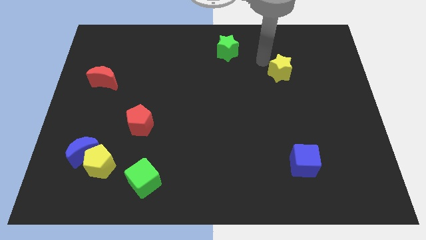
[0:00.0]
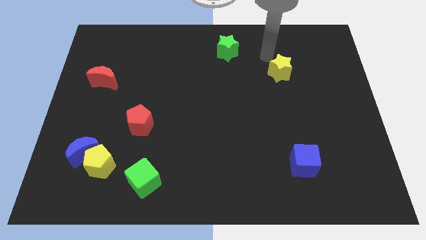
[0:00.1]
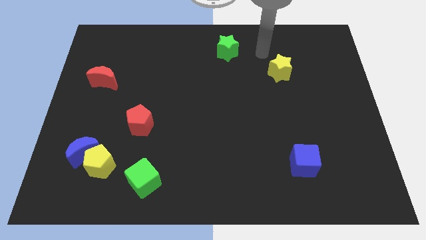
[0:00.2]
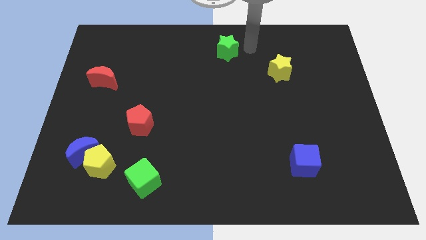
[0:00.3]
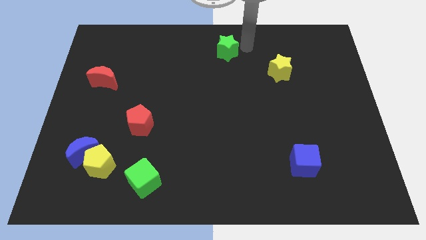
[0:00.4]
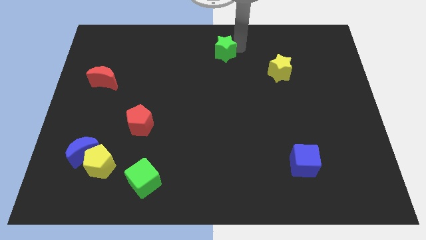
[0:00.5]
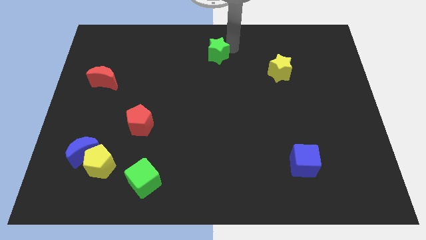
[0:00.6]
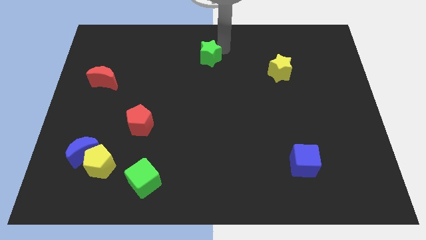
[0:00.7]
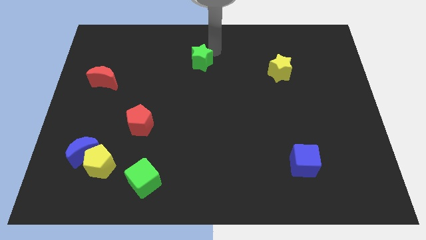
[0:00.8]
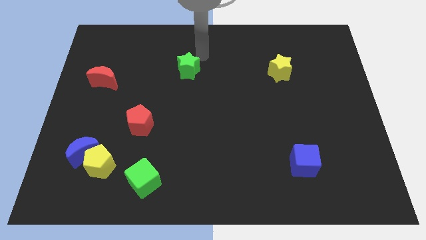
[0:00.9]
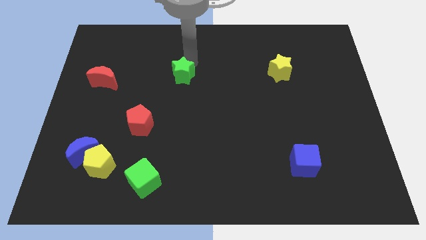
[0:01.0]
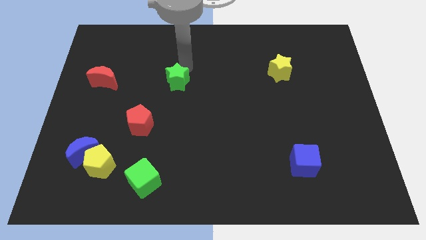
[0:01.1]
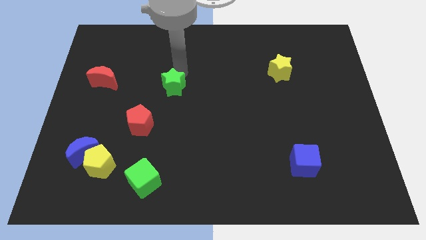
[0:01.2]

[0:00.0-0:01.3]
place green star to the right of red moon

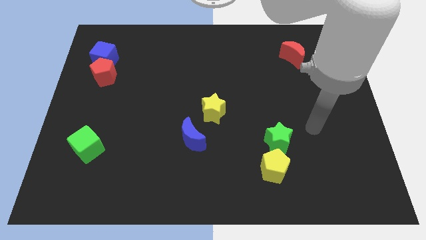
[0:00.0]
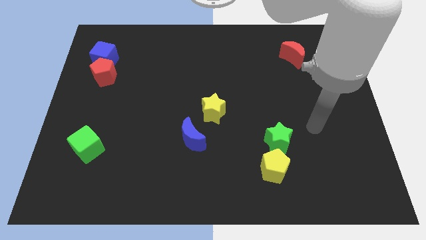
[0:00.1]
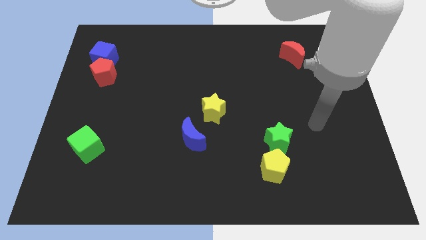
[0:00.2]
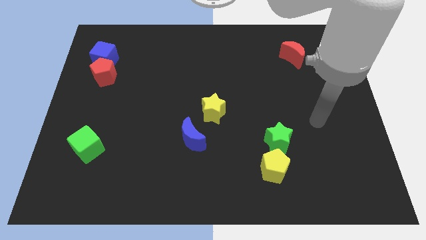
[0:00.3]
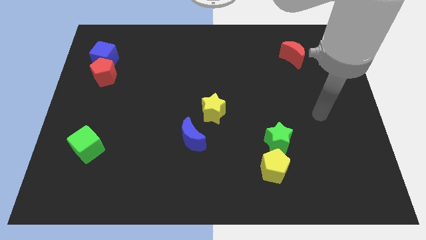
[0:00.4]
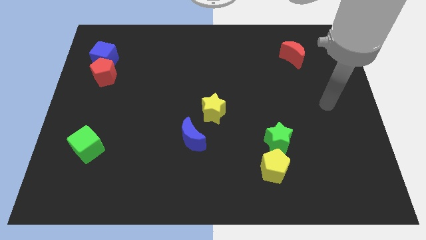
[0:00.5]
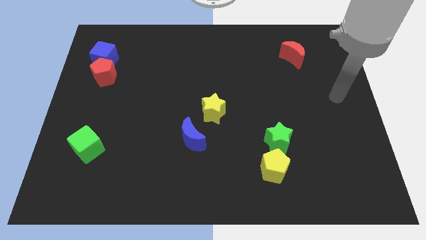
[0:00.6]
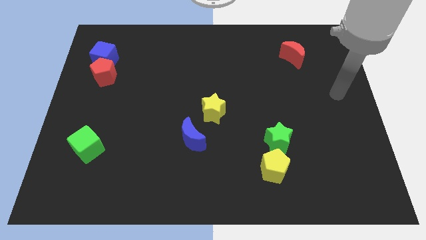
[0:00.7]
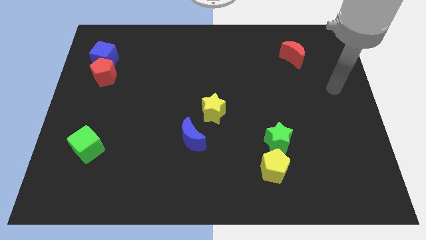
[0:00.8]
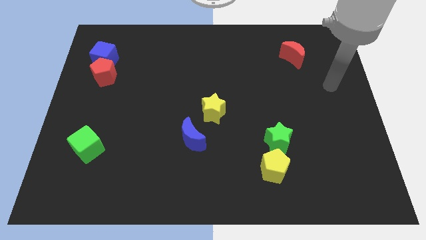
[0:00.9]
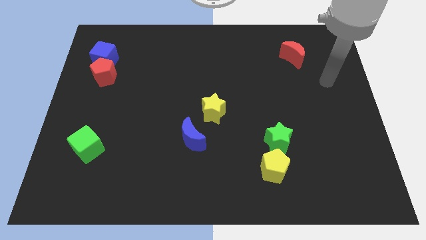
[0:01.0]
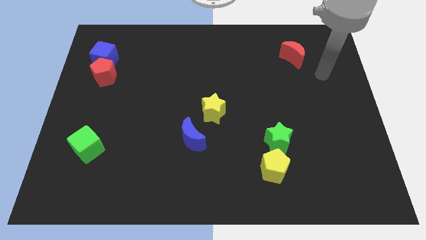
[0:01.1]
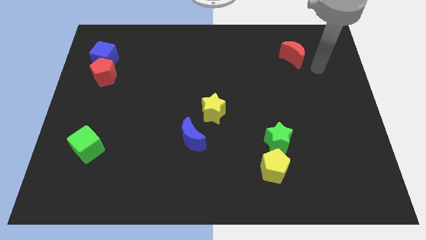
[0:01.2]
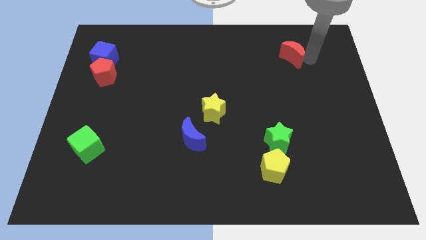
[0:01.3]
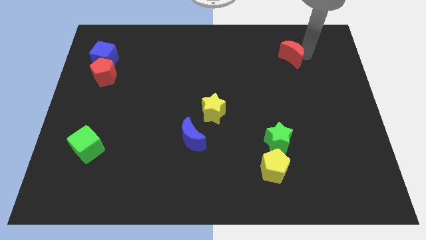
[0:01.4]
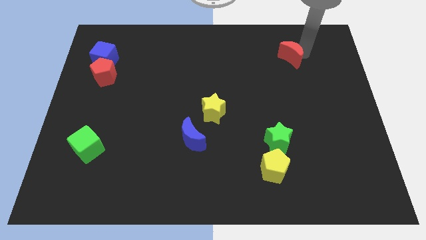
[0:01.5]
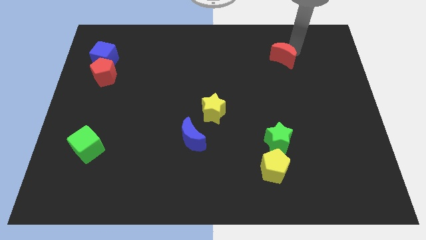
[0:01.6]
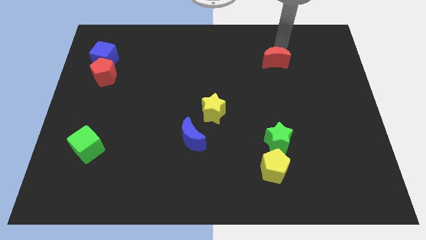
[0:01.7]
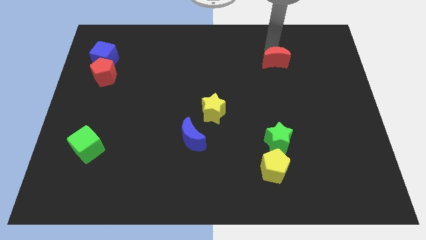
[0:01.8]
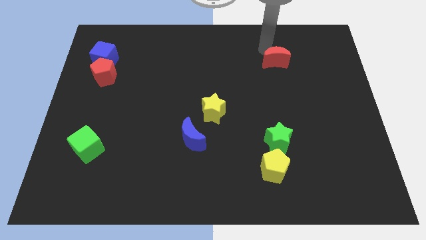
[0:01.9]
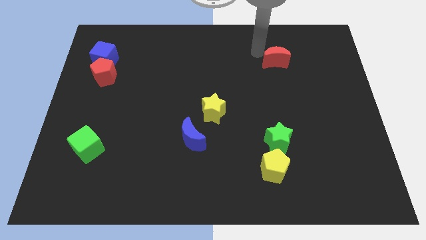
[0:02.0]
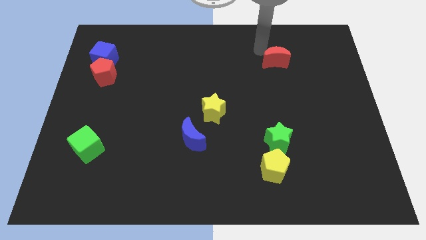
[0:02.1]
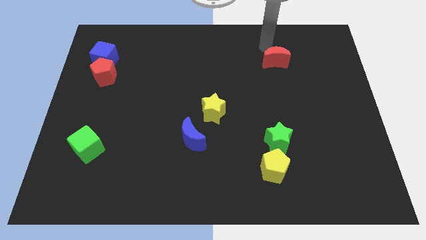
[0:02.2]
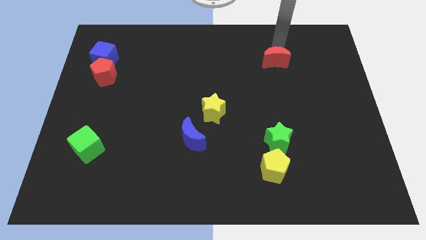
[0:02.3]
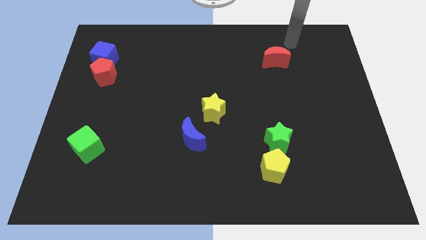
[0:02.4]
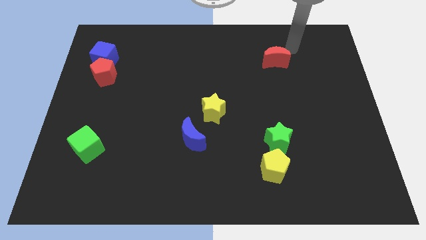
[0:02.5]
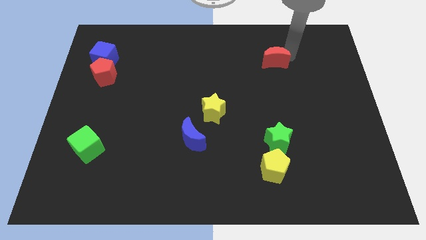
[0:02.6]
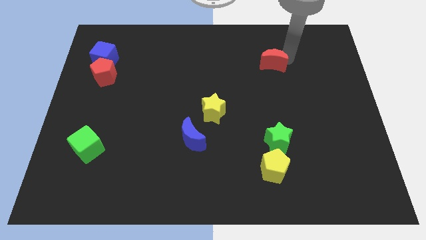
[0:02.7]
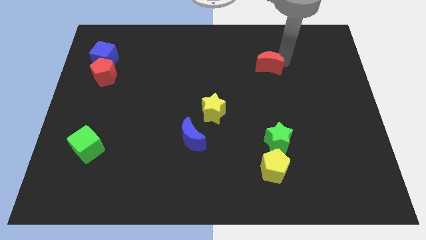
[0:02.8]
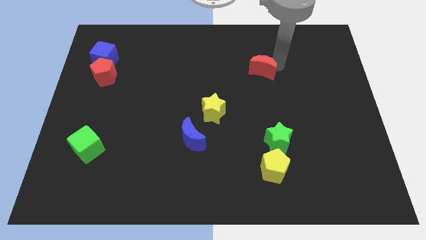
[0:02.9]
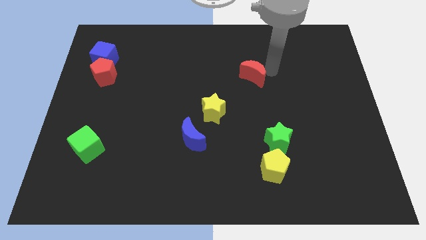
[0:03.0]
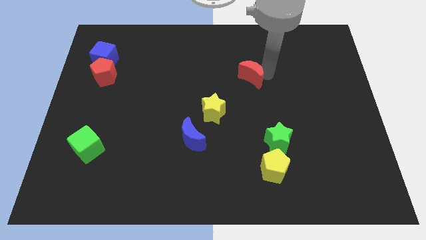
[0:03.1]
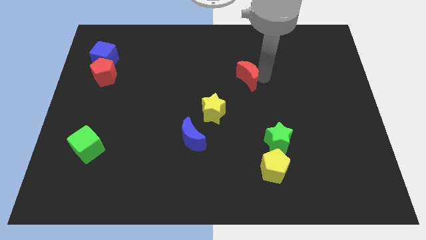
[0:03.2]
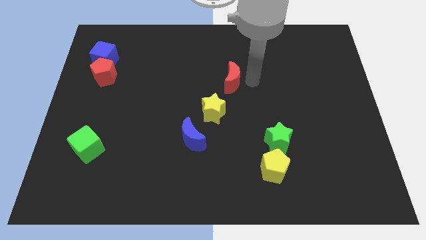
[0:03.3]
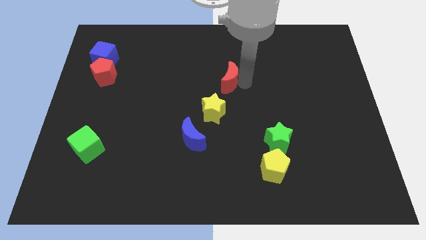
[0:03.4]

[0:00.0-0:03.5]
place the red crescent to the top right side of the yellow star

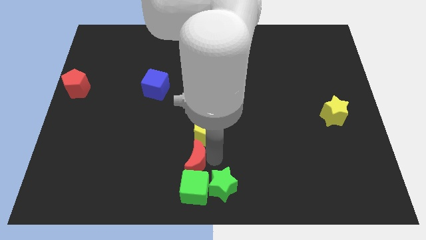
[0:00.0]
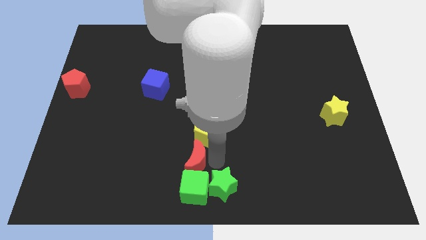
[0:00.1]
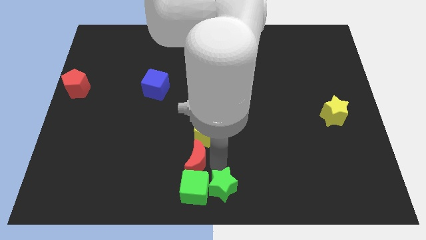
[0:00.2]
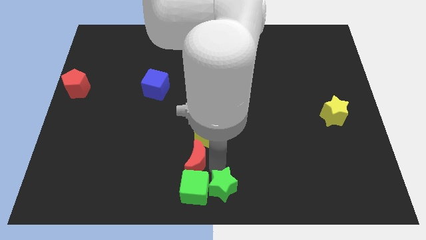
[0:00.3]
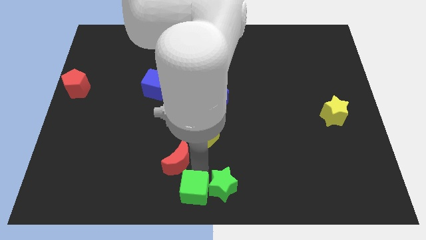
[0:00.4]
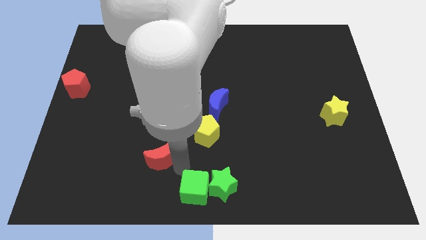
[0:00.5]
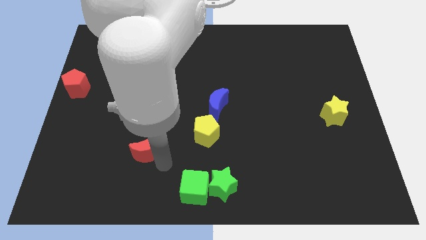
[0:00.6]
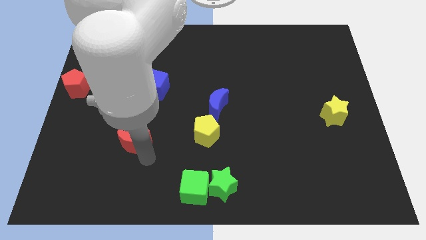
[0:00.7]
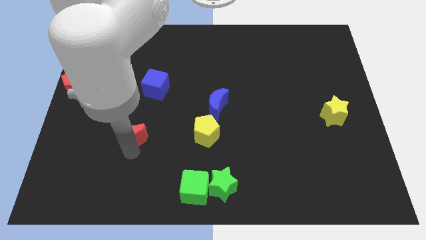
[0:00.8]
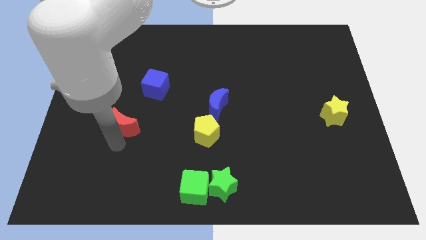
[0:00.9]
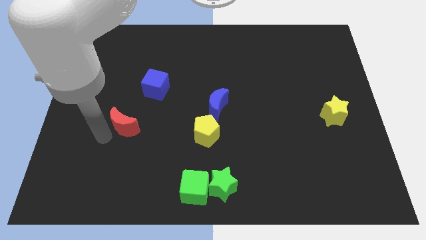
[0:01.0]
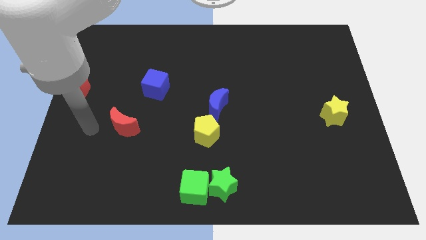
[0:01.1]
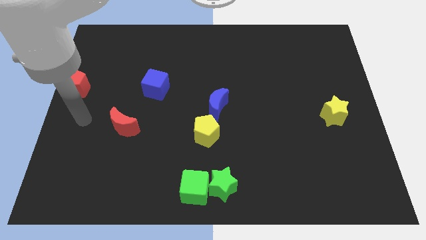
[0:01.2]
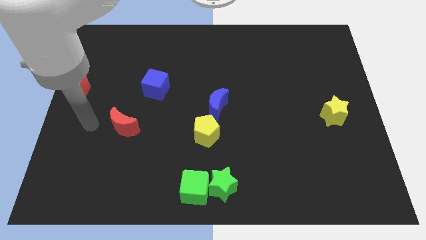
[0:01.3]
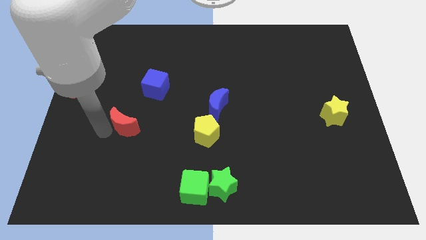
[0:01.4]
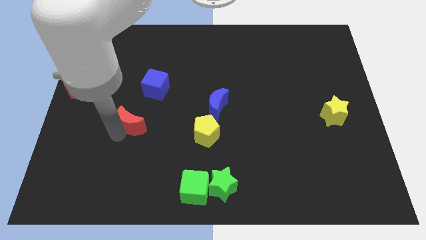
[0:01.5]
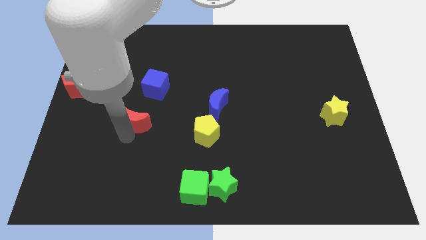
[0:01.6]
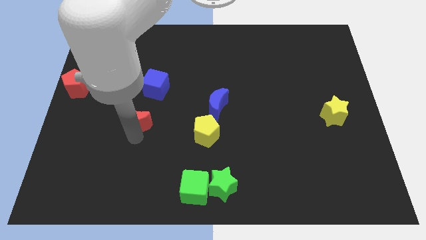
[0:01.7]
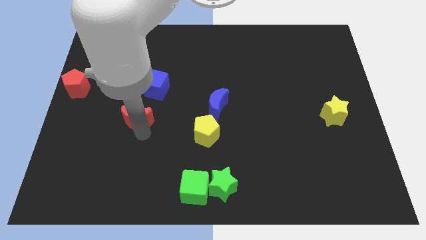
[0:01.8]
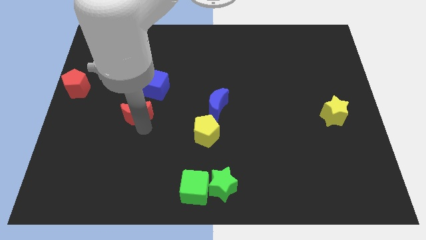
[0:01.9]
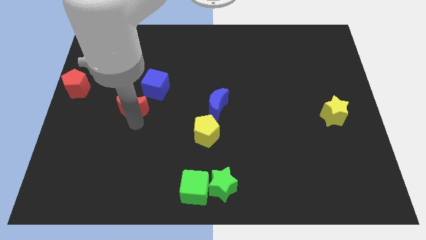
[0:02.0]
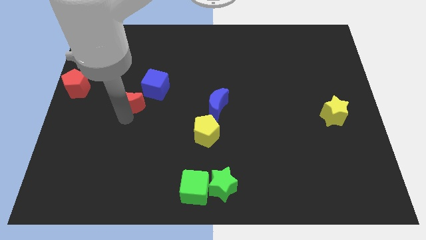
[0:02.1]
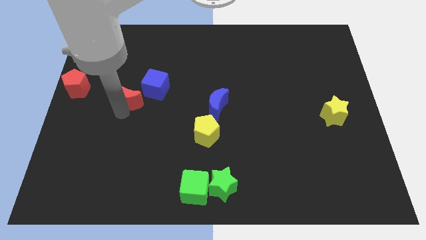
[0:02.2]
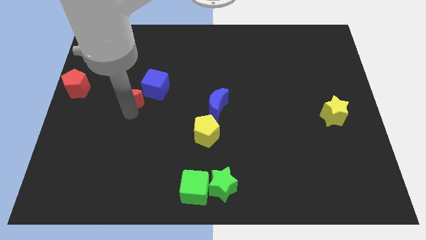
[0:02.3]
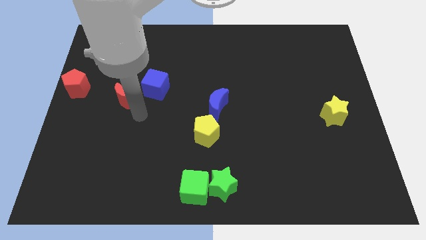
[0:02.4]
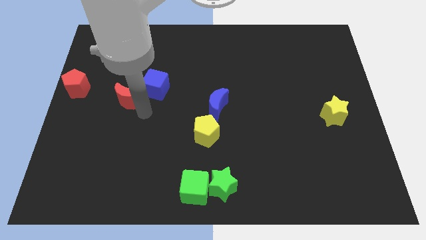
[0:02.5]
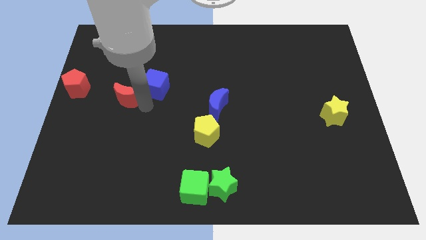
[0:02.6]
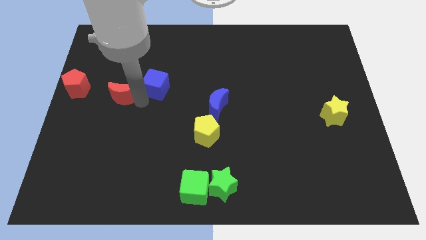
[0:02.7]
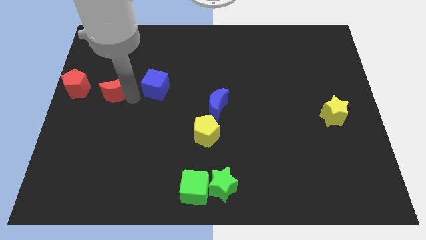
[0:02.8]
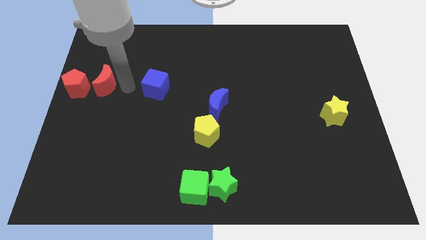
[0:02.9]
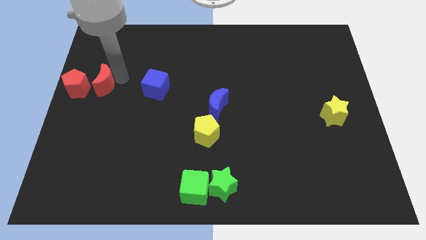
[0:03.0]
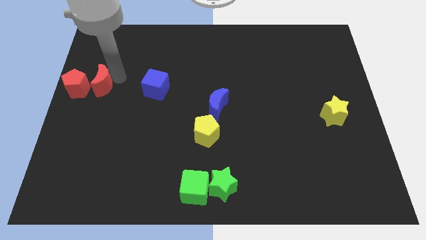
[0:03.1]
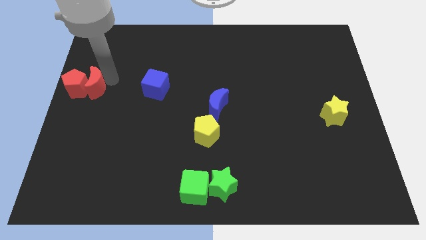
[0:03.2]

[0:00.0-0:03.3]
push the red moon into the red pentagon

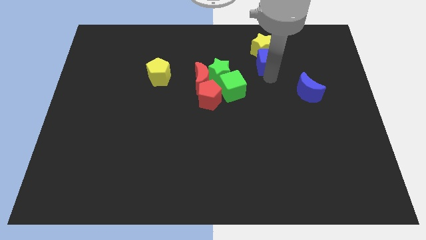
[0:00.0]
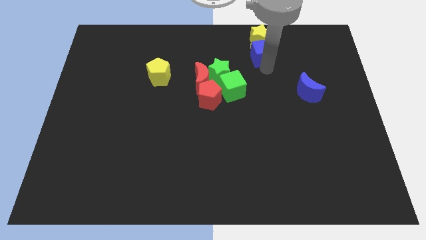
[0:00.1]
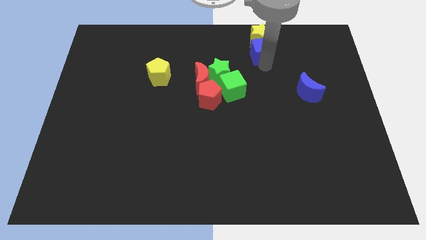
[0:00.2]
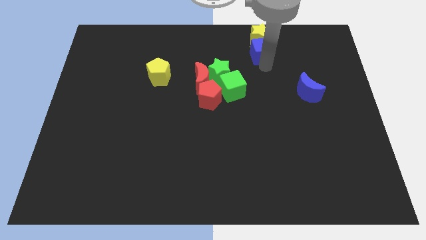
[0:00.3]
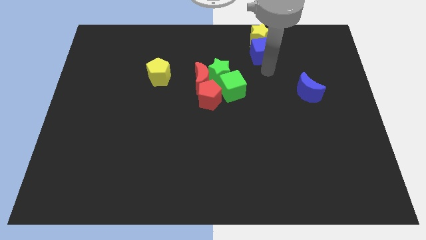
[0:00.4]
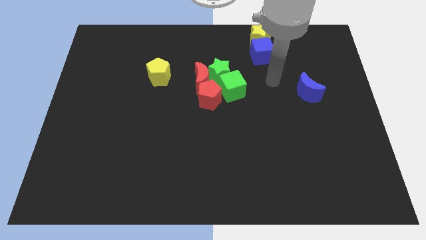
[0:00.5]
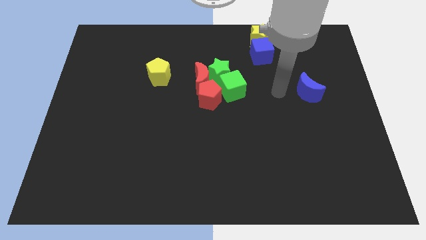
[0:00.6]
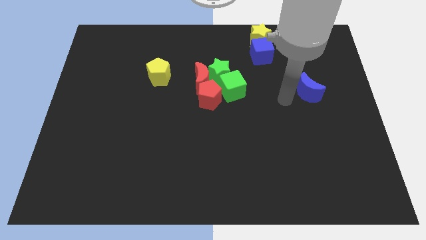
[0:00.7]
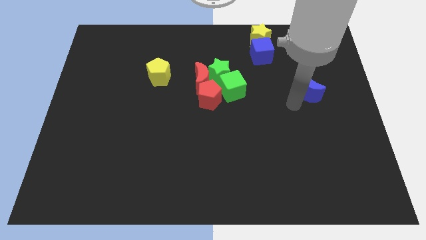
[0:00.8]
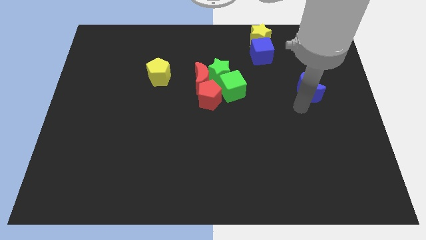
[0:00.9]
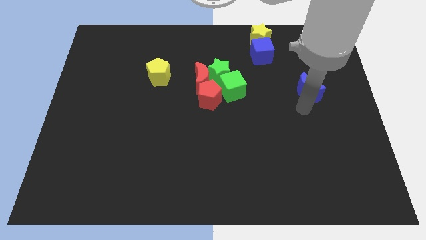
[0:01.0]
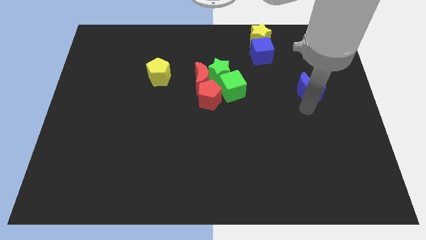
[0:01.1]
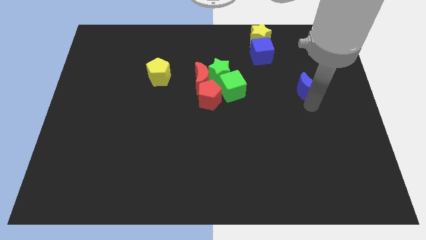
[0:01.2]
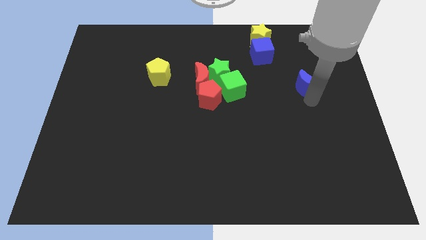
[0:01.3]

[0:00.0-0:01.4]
place blue cube and yellow star towards top center of the board
